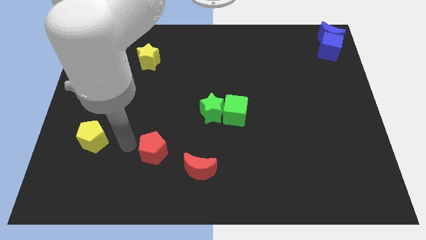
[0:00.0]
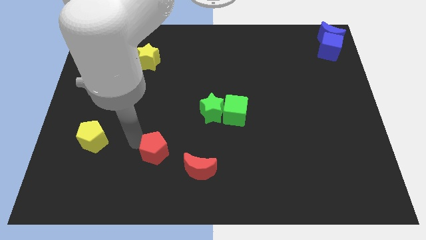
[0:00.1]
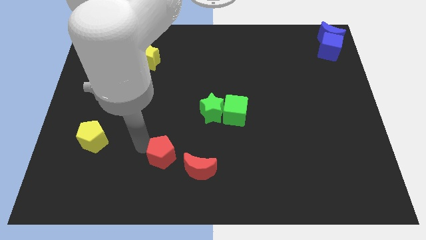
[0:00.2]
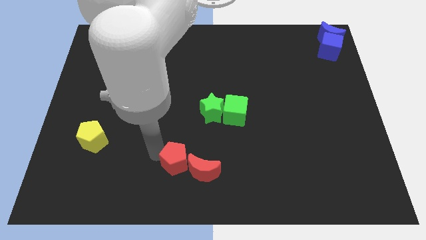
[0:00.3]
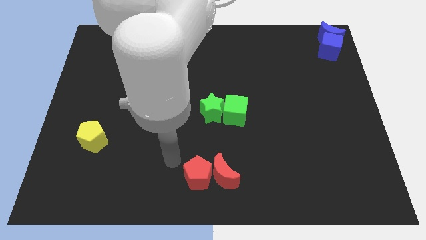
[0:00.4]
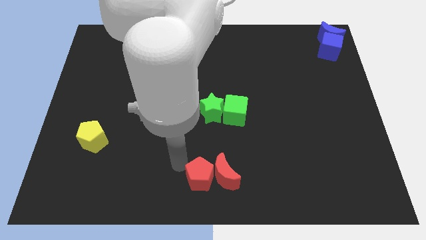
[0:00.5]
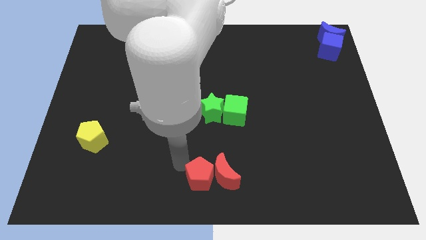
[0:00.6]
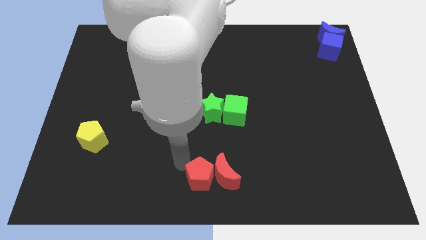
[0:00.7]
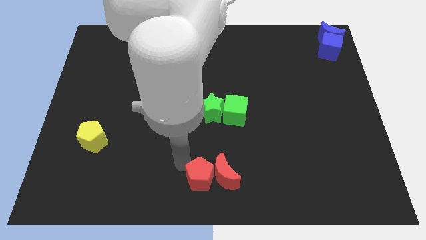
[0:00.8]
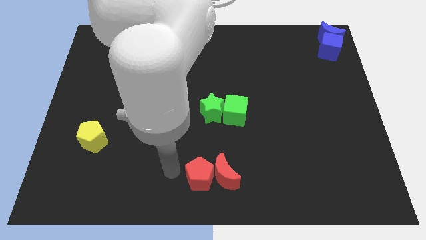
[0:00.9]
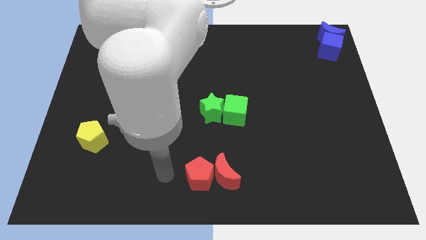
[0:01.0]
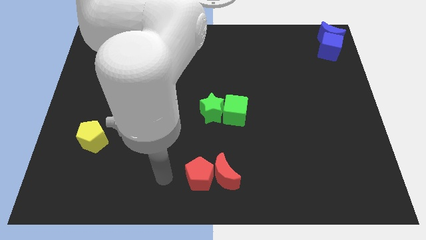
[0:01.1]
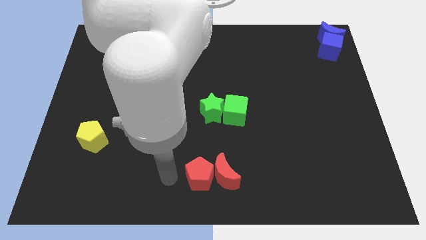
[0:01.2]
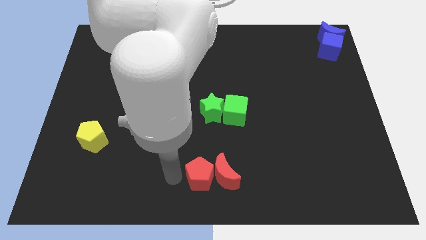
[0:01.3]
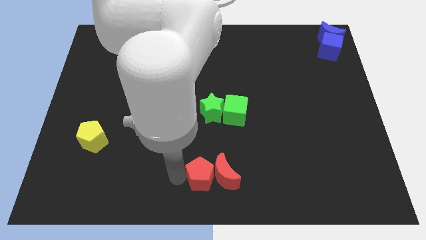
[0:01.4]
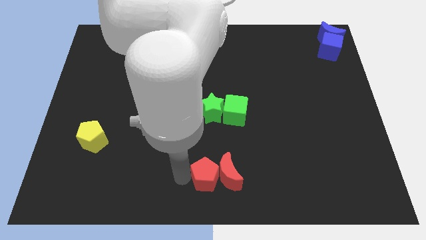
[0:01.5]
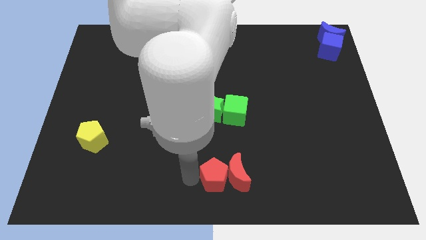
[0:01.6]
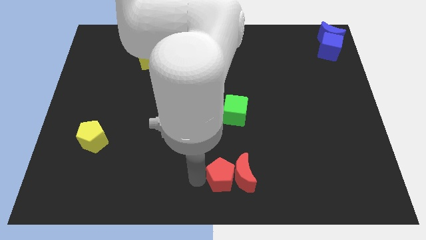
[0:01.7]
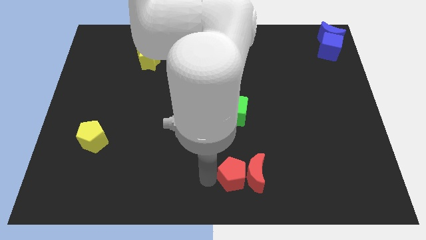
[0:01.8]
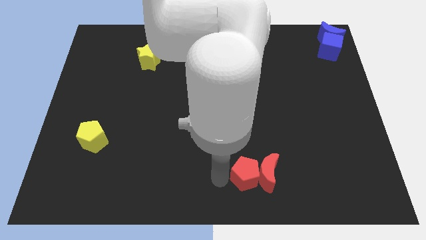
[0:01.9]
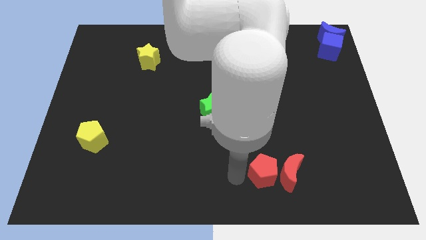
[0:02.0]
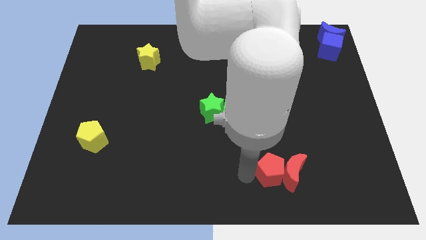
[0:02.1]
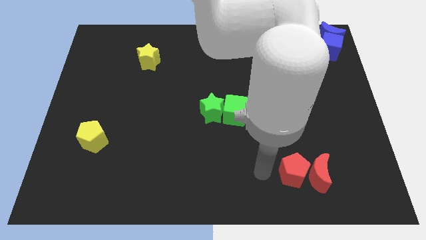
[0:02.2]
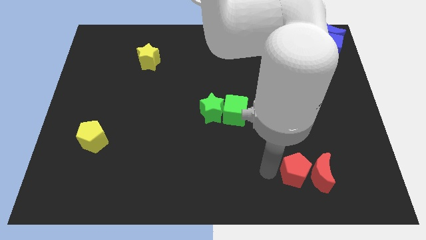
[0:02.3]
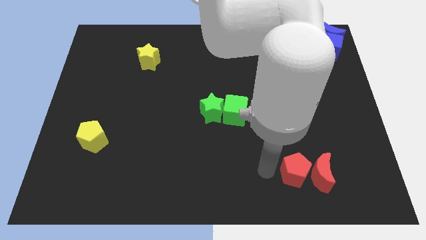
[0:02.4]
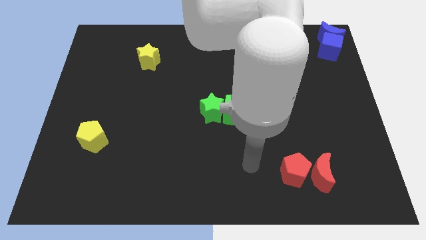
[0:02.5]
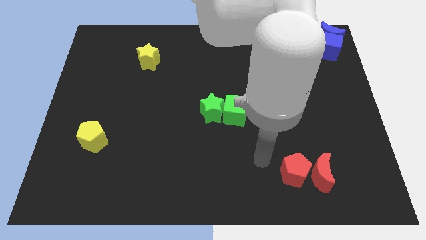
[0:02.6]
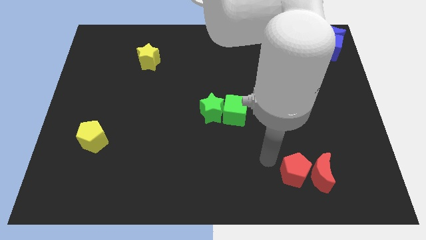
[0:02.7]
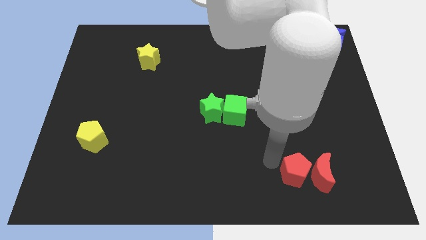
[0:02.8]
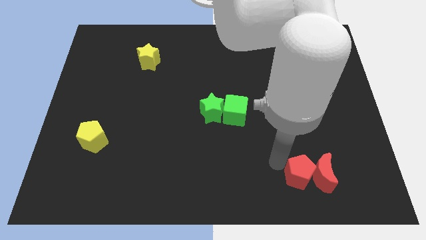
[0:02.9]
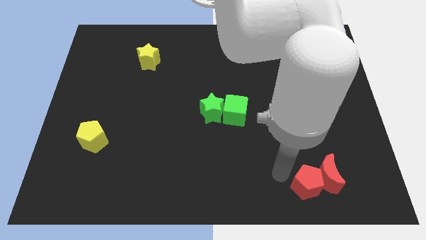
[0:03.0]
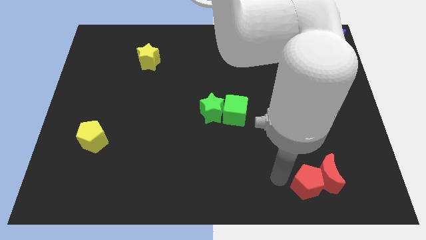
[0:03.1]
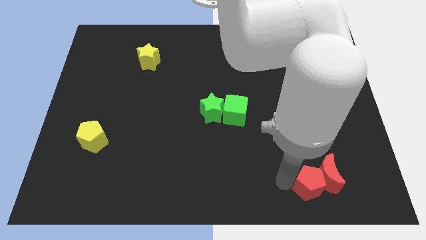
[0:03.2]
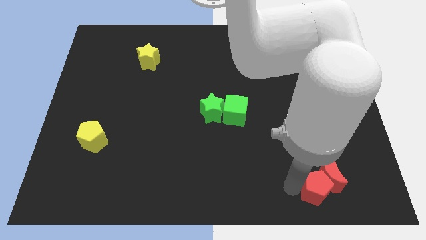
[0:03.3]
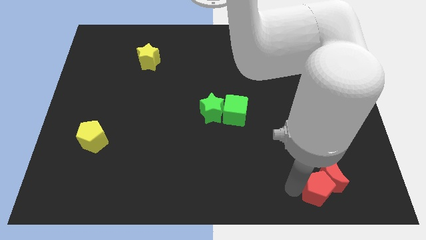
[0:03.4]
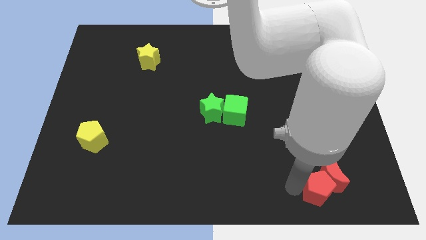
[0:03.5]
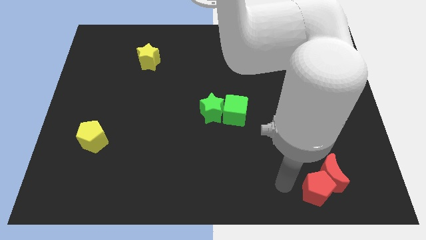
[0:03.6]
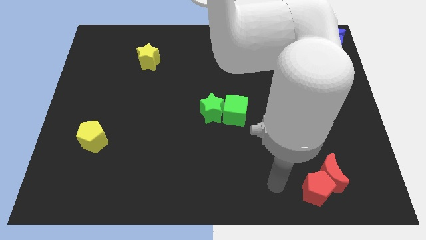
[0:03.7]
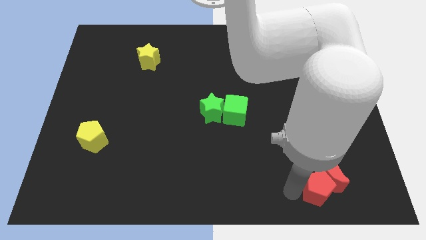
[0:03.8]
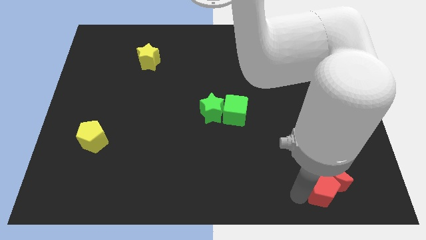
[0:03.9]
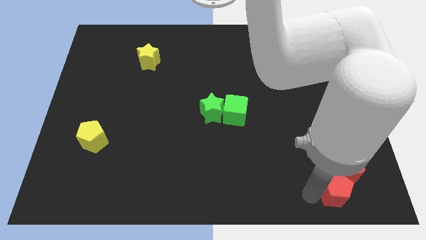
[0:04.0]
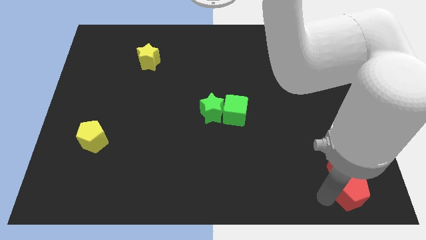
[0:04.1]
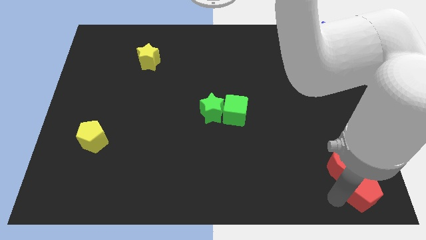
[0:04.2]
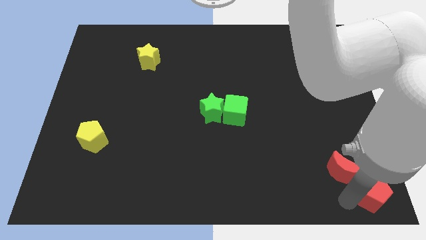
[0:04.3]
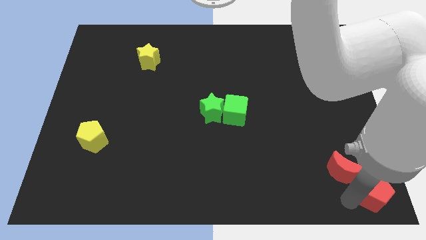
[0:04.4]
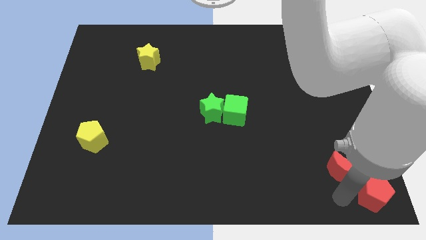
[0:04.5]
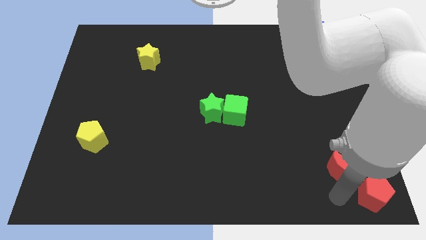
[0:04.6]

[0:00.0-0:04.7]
push the red pentagon to the right bottom

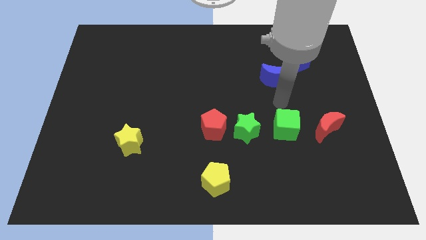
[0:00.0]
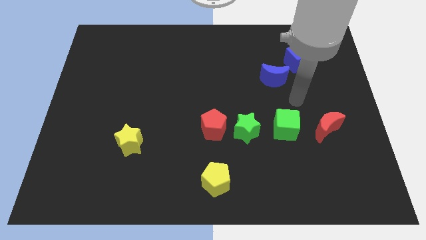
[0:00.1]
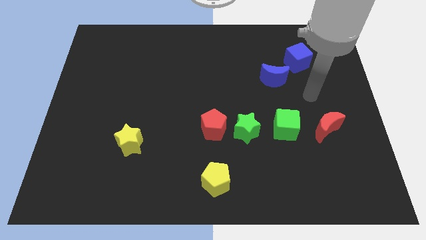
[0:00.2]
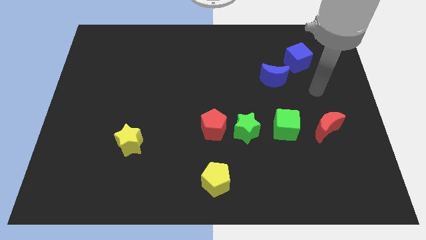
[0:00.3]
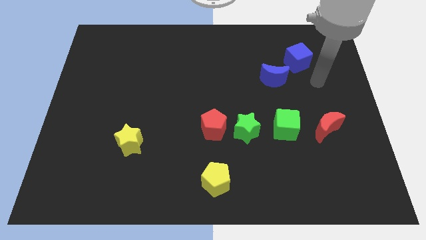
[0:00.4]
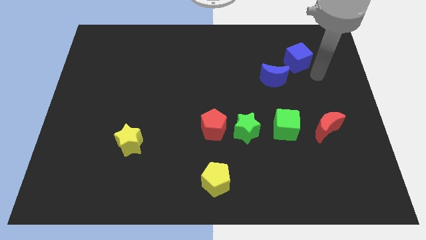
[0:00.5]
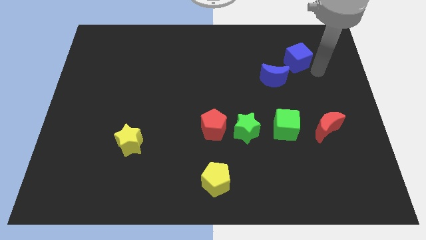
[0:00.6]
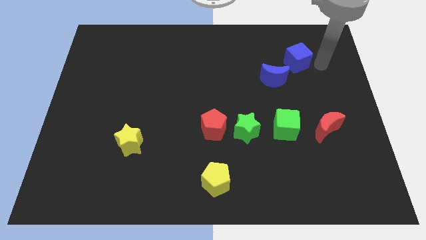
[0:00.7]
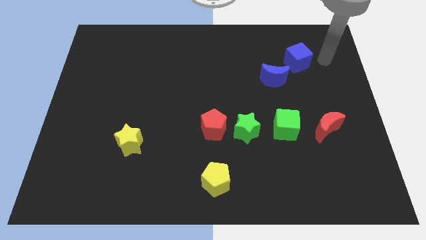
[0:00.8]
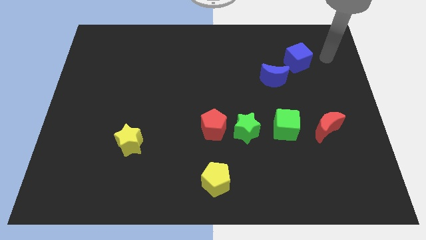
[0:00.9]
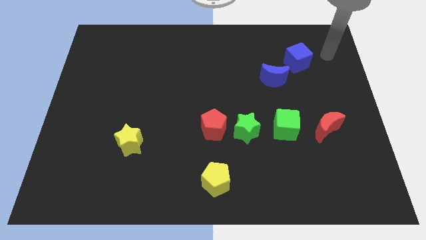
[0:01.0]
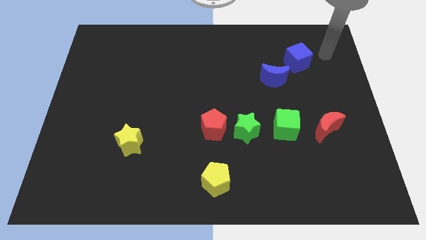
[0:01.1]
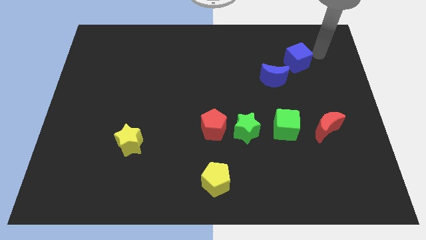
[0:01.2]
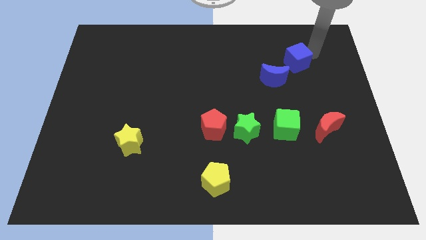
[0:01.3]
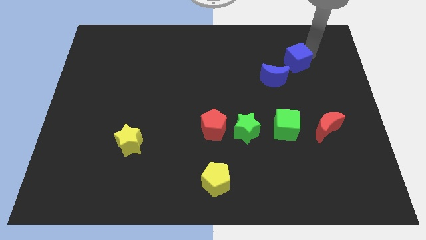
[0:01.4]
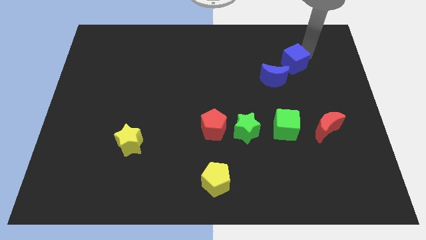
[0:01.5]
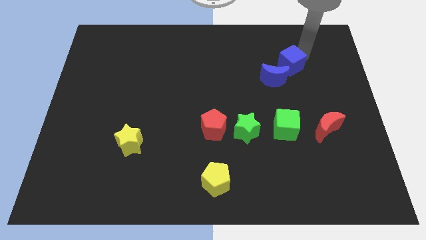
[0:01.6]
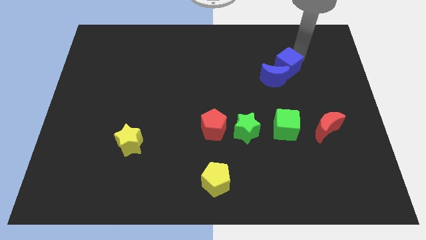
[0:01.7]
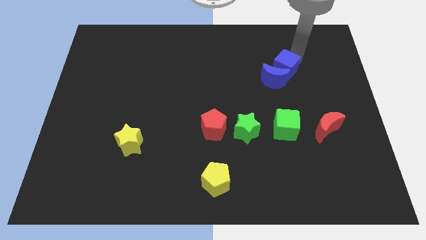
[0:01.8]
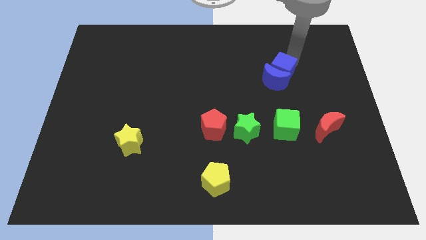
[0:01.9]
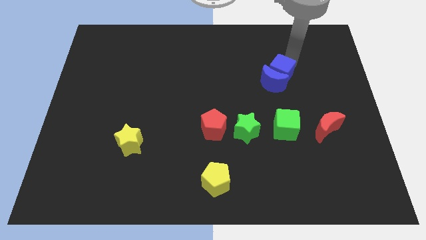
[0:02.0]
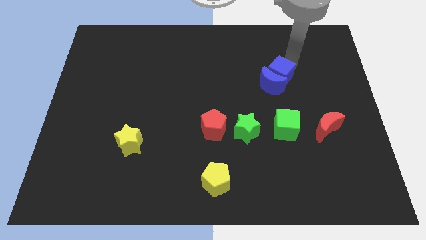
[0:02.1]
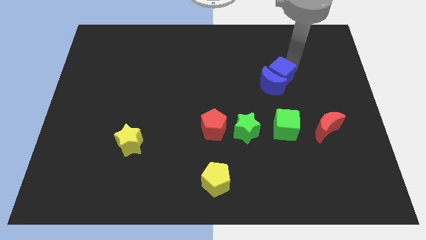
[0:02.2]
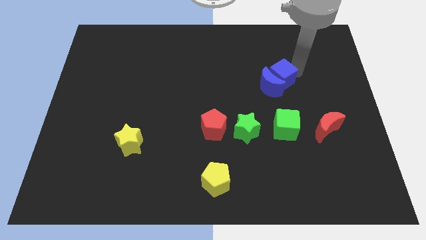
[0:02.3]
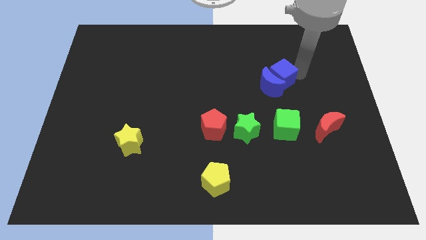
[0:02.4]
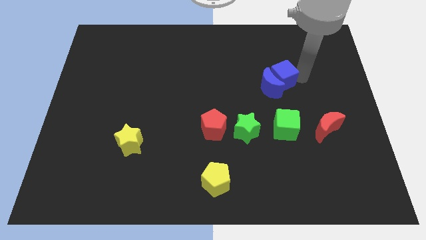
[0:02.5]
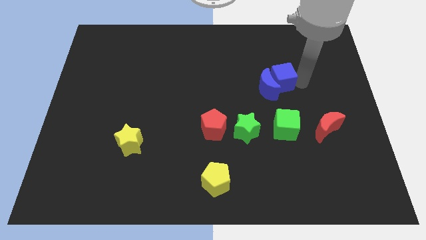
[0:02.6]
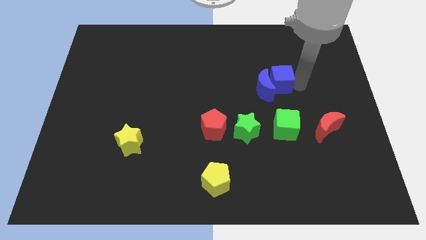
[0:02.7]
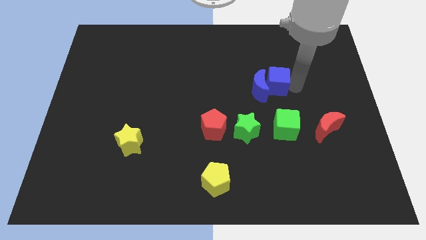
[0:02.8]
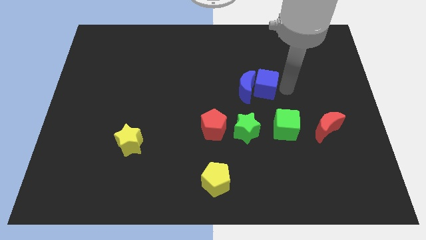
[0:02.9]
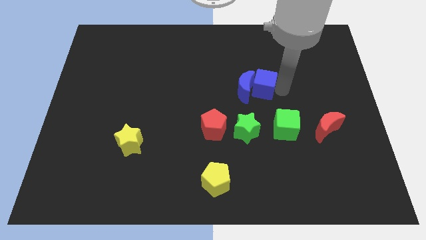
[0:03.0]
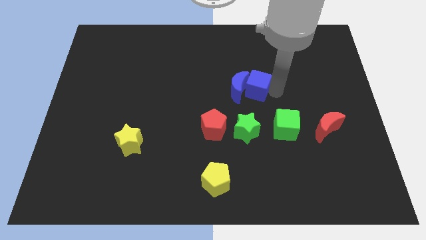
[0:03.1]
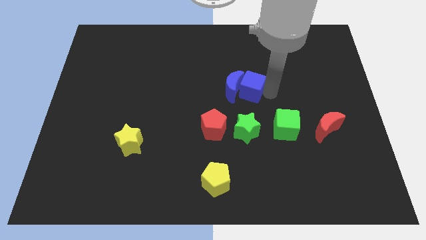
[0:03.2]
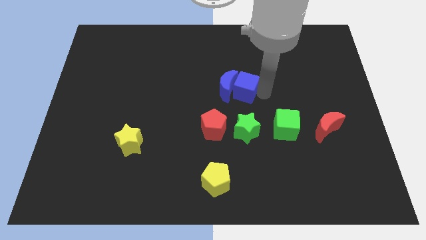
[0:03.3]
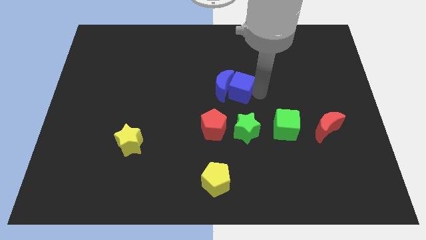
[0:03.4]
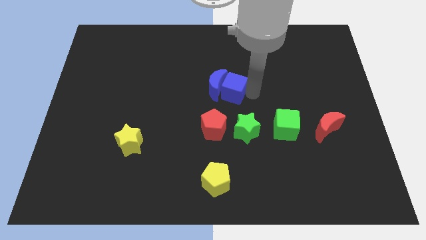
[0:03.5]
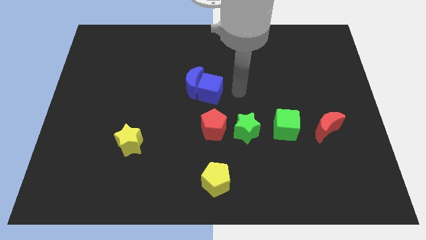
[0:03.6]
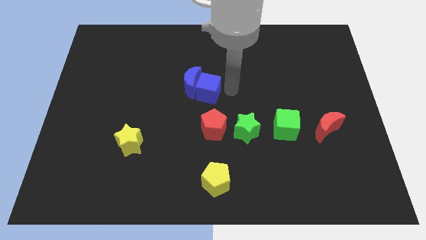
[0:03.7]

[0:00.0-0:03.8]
push the blue crescent with blue cube to the center of the board

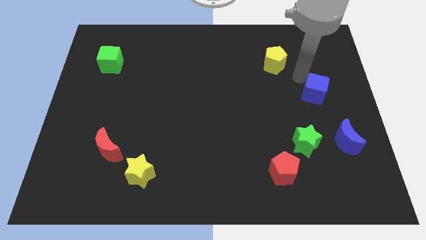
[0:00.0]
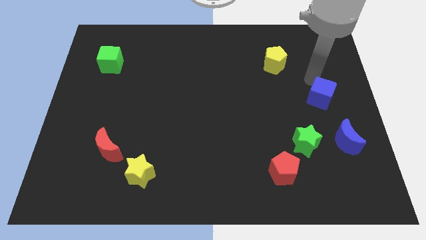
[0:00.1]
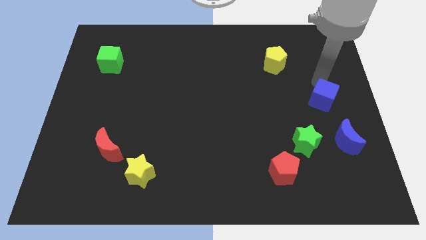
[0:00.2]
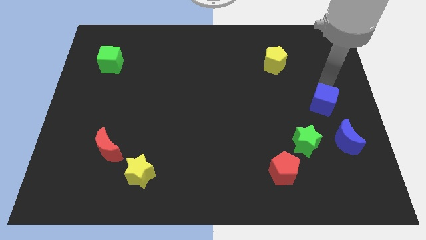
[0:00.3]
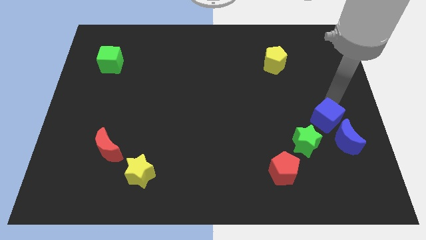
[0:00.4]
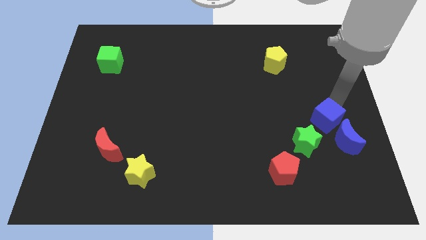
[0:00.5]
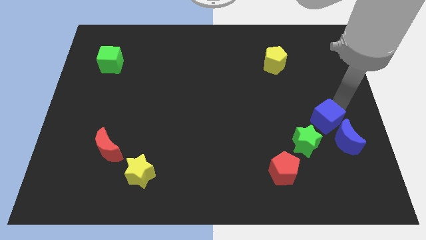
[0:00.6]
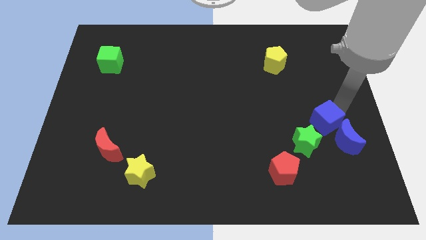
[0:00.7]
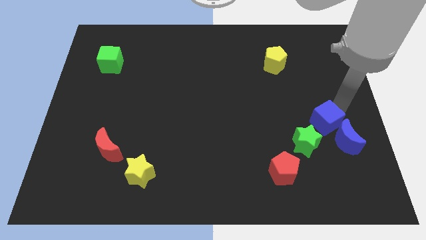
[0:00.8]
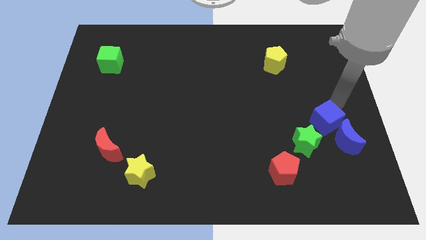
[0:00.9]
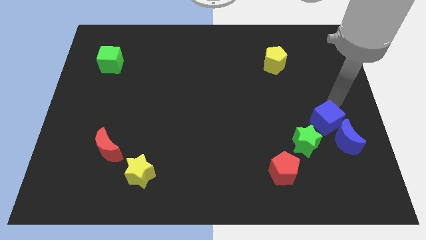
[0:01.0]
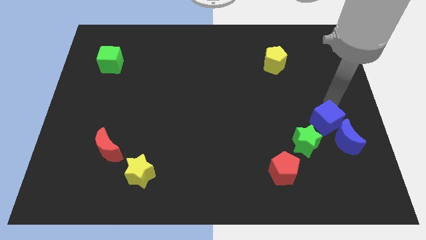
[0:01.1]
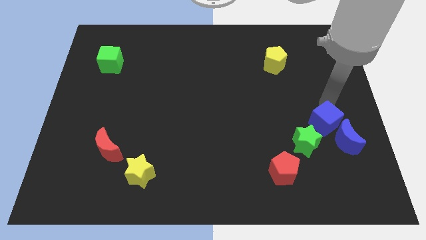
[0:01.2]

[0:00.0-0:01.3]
move blue cube near blue moon
